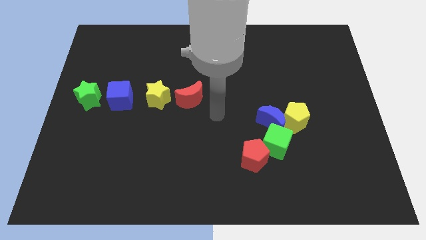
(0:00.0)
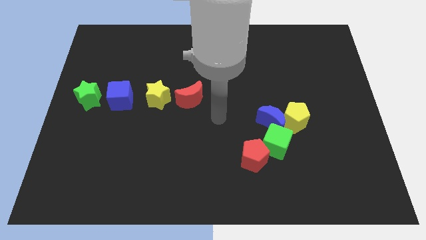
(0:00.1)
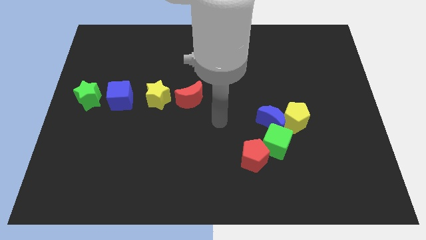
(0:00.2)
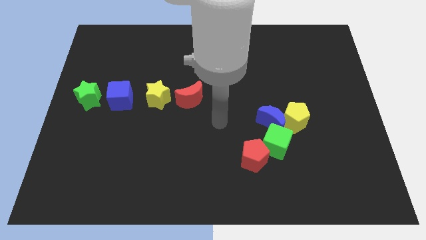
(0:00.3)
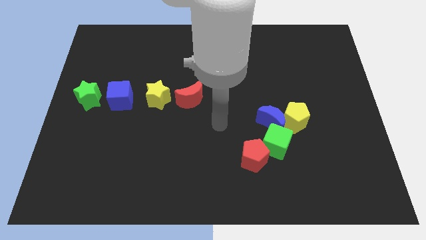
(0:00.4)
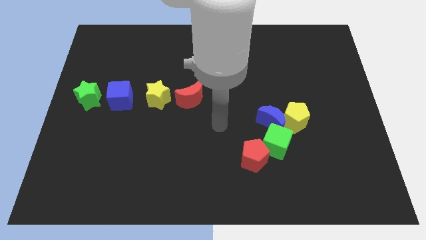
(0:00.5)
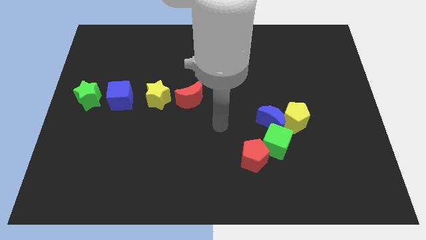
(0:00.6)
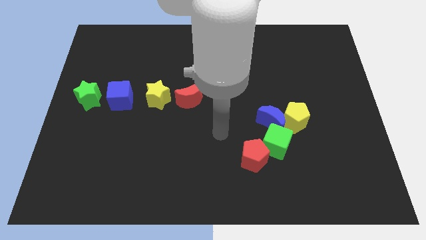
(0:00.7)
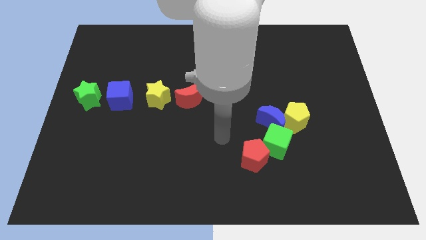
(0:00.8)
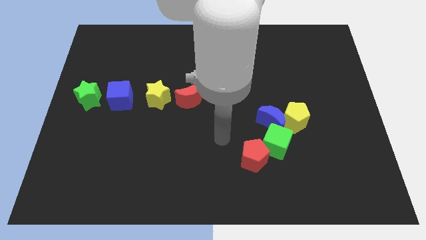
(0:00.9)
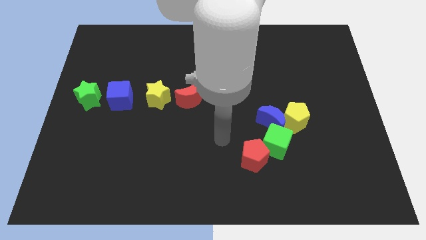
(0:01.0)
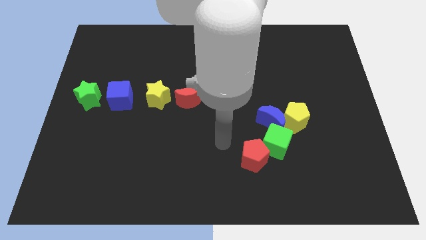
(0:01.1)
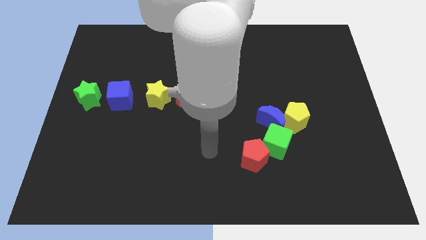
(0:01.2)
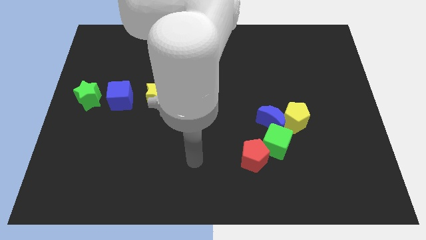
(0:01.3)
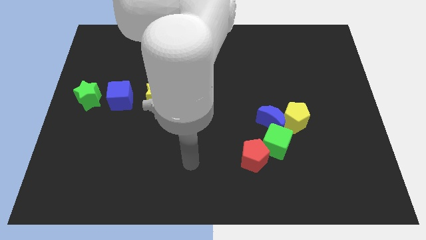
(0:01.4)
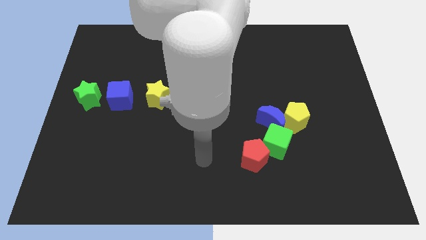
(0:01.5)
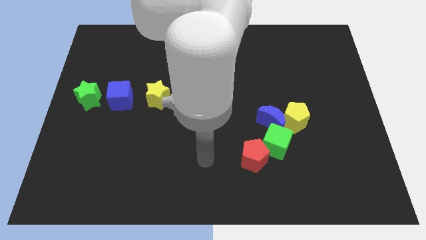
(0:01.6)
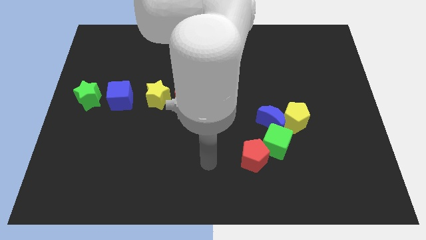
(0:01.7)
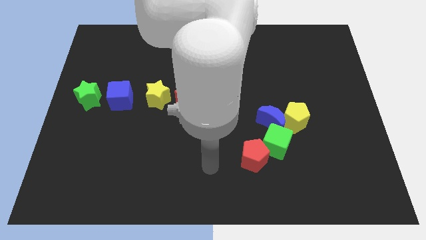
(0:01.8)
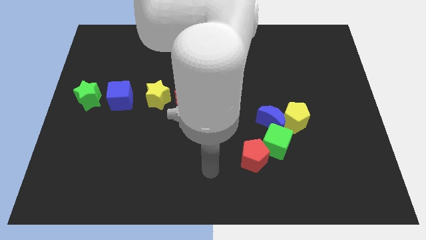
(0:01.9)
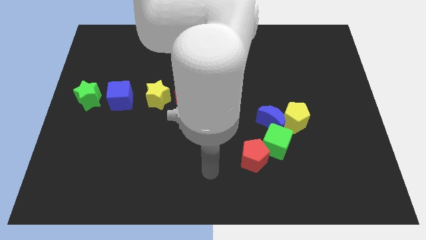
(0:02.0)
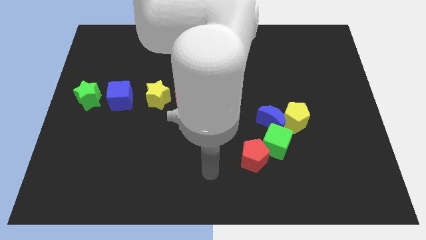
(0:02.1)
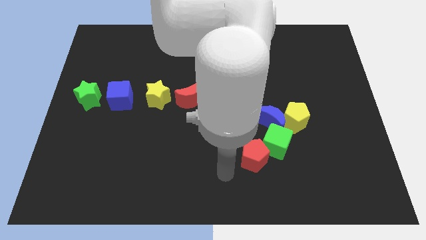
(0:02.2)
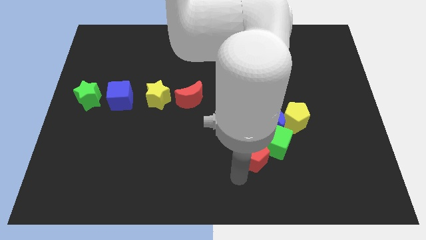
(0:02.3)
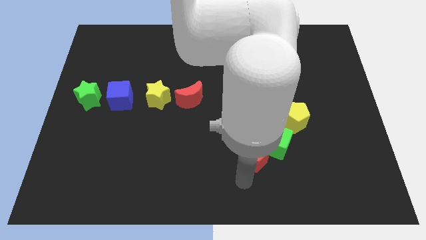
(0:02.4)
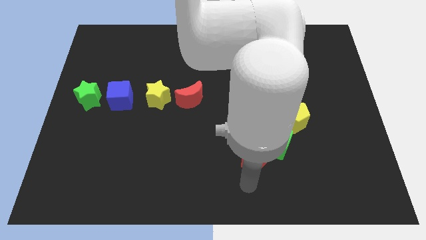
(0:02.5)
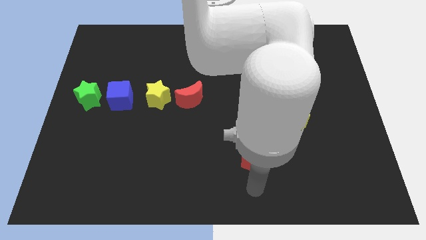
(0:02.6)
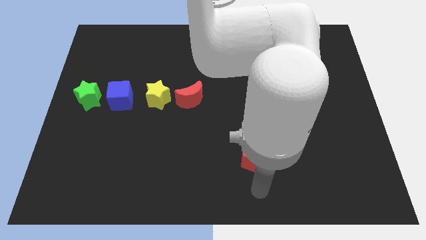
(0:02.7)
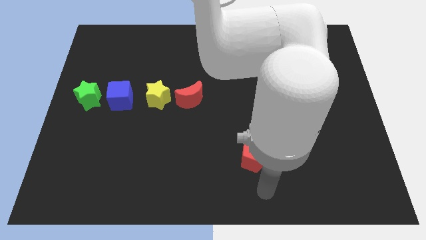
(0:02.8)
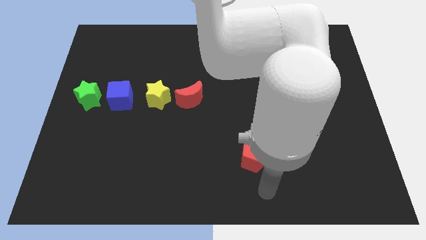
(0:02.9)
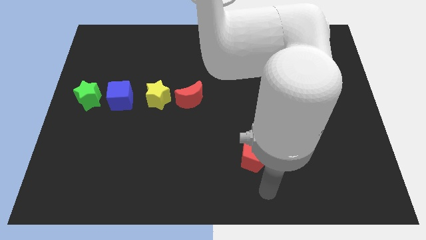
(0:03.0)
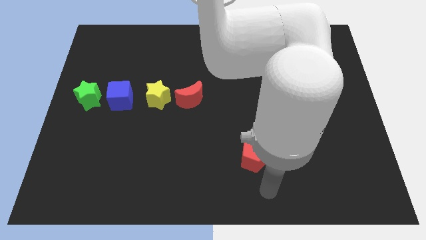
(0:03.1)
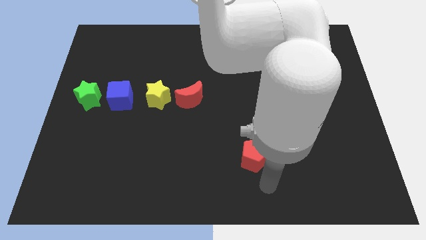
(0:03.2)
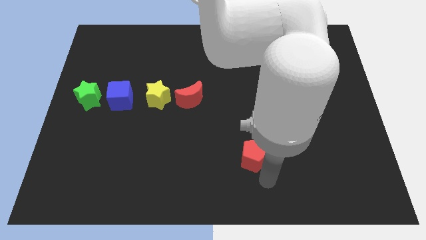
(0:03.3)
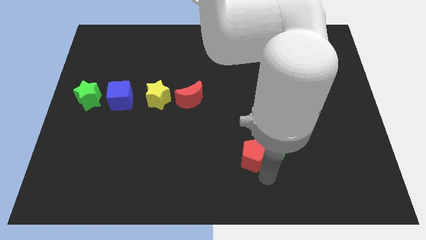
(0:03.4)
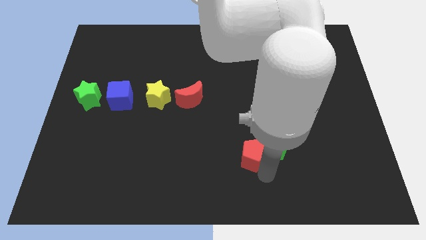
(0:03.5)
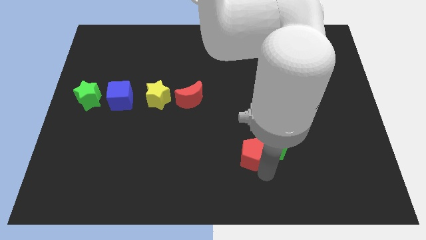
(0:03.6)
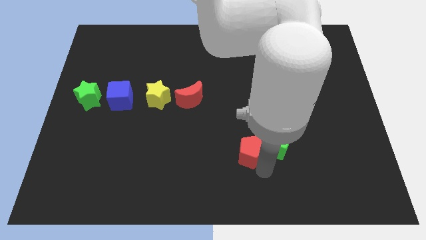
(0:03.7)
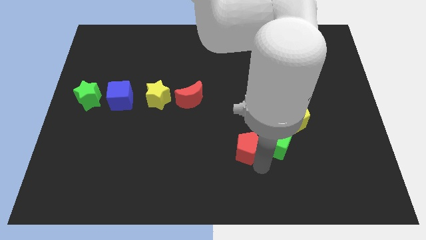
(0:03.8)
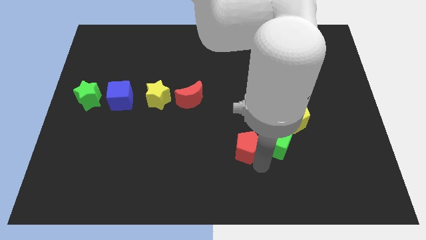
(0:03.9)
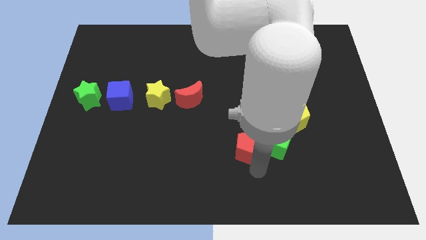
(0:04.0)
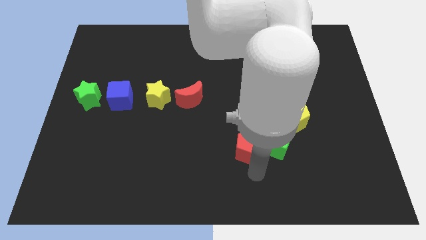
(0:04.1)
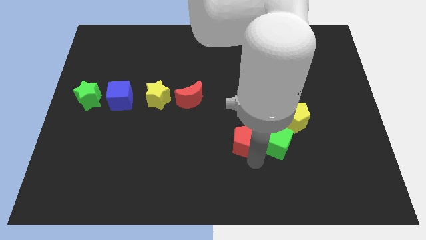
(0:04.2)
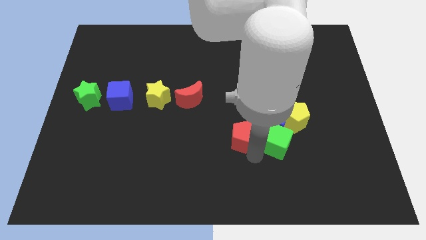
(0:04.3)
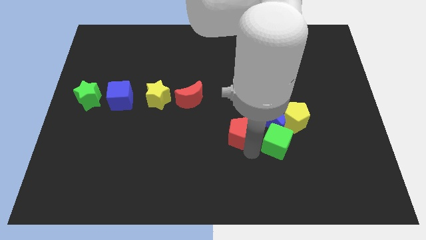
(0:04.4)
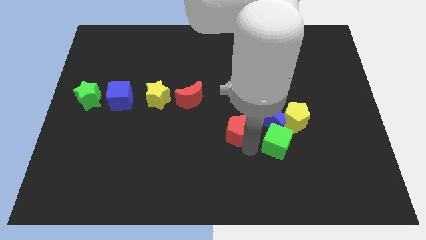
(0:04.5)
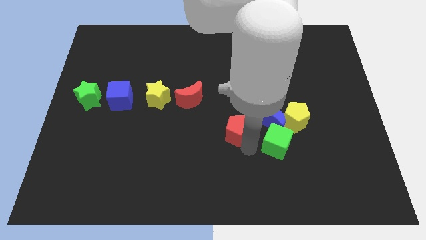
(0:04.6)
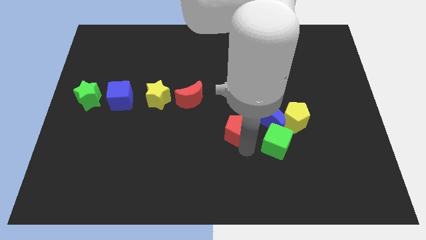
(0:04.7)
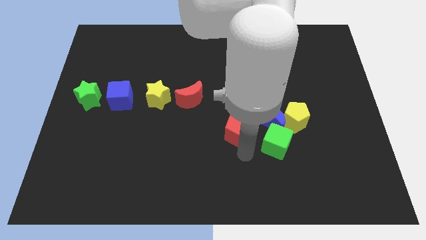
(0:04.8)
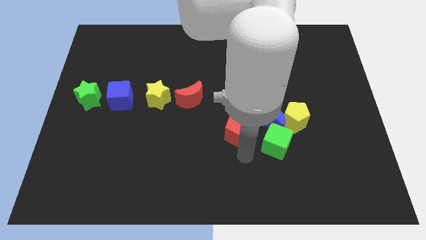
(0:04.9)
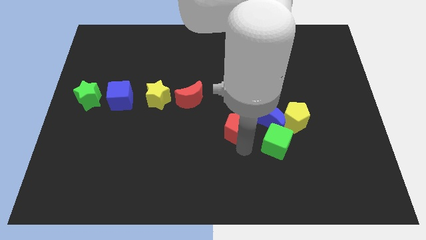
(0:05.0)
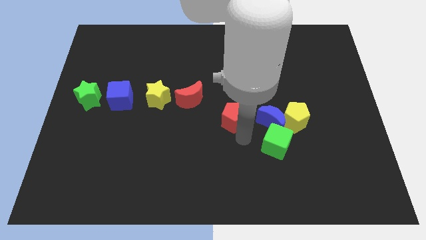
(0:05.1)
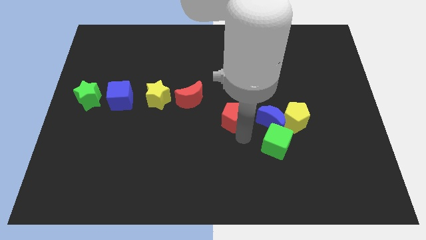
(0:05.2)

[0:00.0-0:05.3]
separate the red pentagon and the green cube

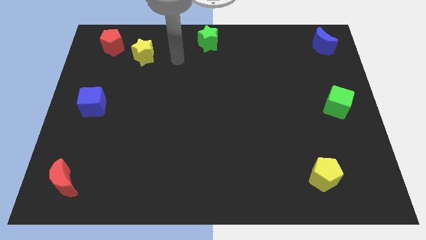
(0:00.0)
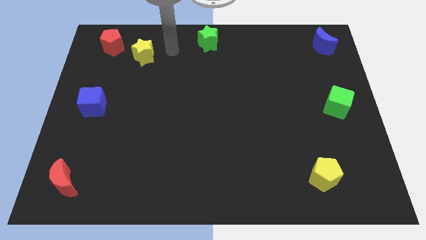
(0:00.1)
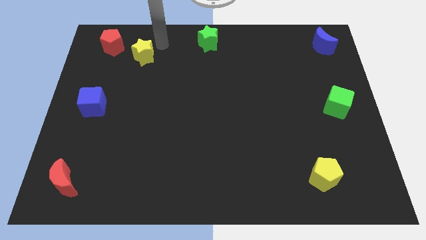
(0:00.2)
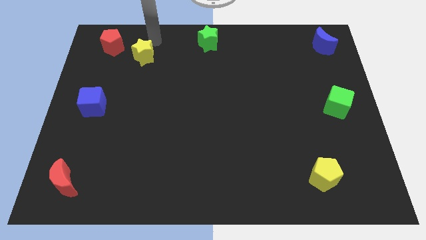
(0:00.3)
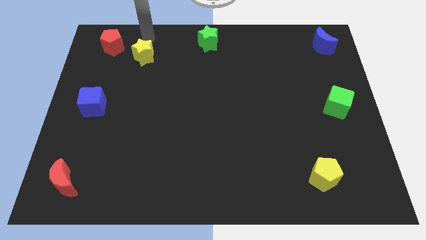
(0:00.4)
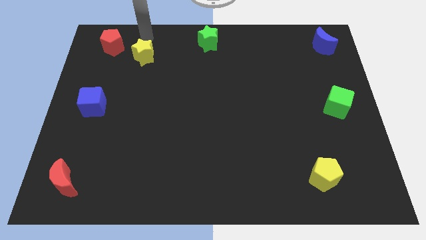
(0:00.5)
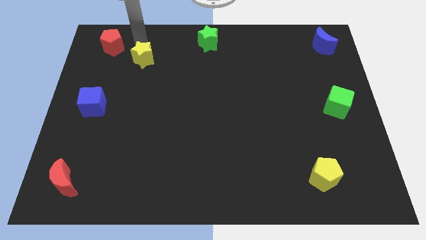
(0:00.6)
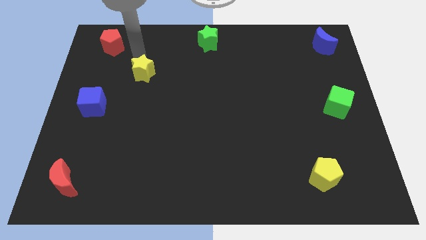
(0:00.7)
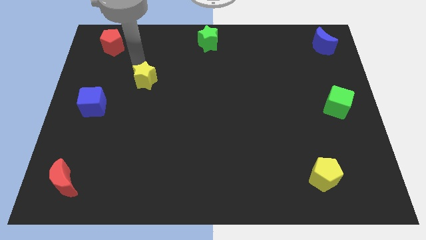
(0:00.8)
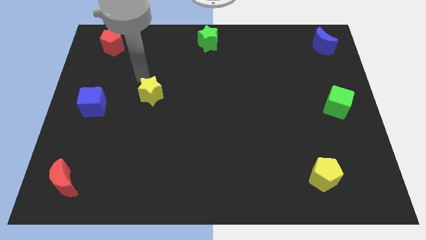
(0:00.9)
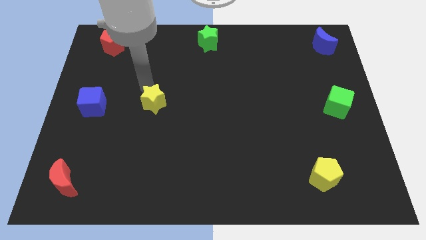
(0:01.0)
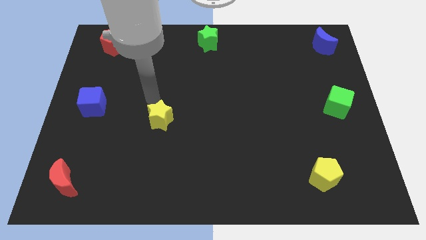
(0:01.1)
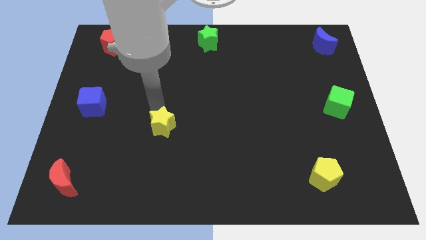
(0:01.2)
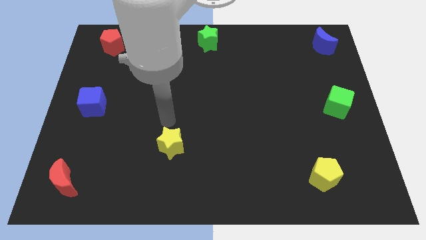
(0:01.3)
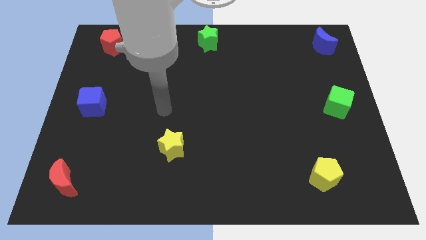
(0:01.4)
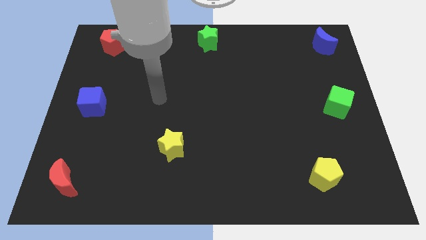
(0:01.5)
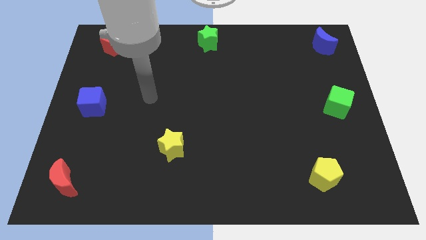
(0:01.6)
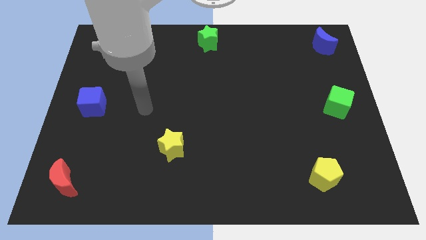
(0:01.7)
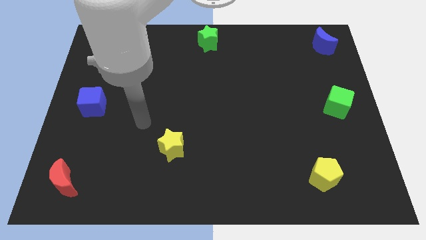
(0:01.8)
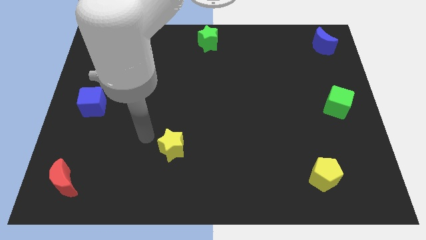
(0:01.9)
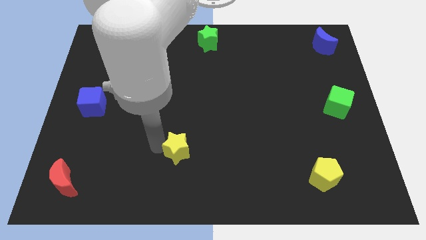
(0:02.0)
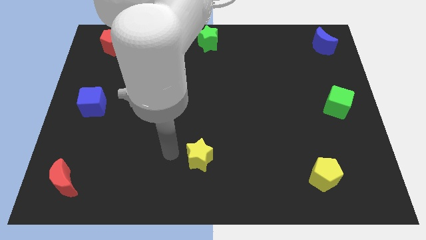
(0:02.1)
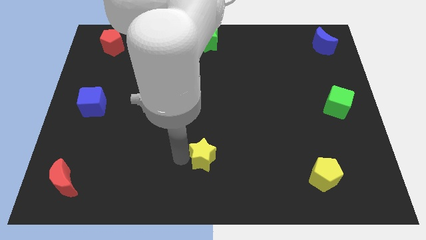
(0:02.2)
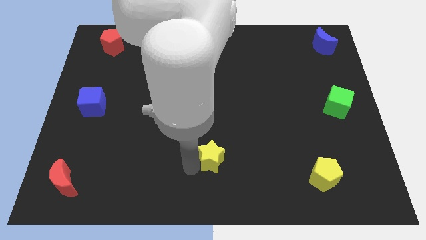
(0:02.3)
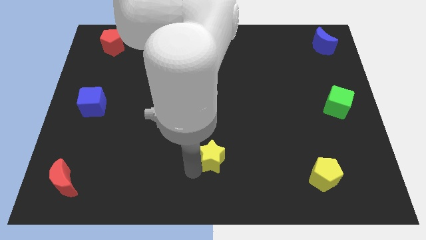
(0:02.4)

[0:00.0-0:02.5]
push the yellow star to the bottom right side of the board

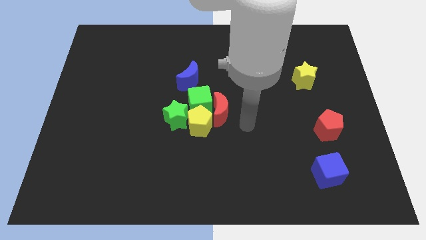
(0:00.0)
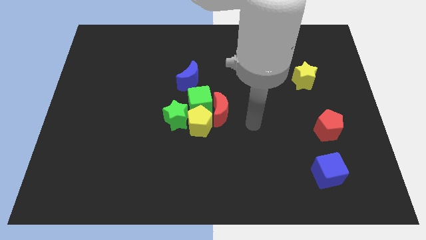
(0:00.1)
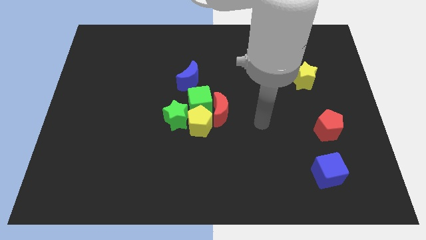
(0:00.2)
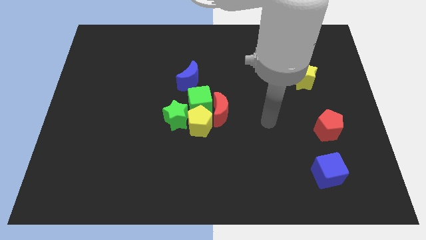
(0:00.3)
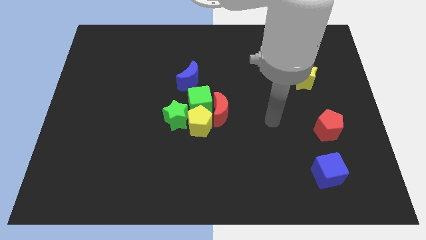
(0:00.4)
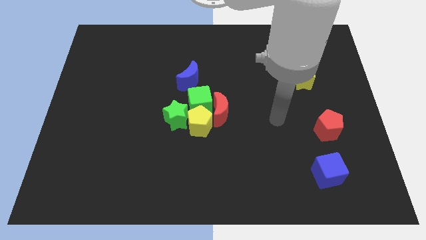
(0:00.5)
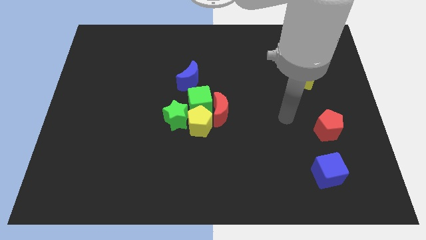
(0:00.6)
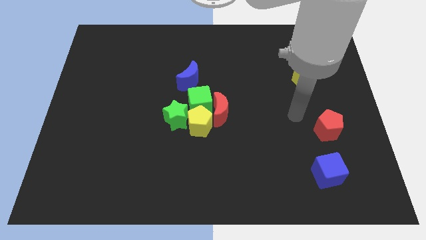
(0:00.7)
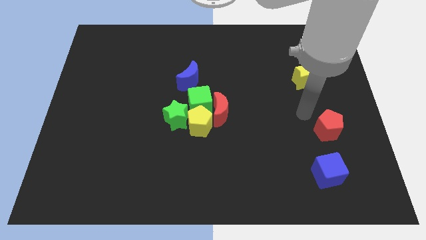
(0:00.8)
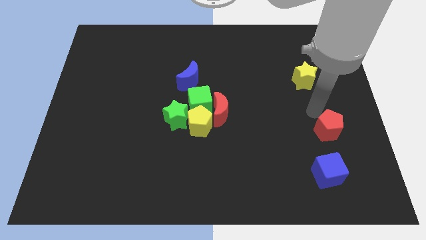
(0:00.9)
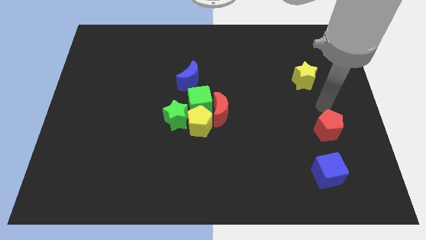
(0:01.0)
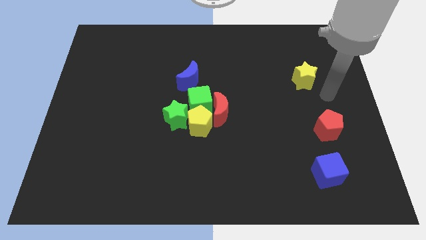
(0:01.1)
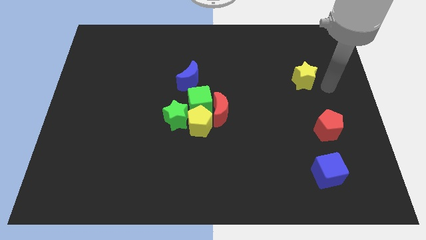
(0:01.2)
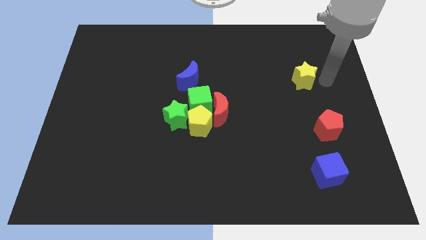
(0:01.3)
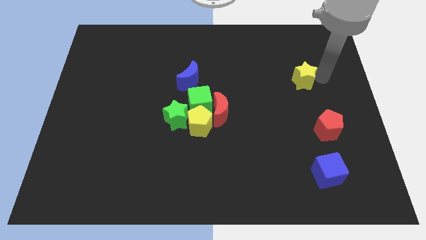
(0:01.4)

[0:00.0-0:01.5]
move your arm to the right of the yellow star
